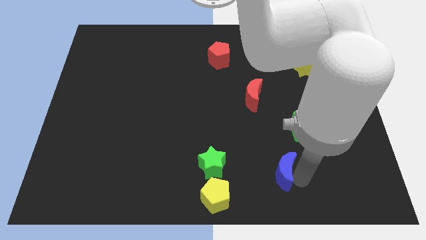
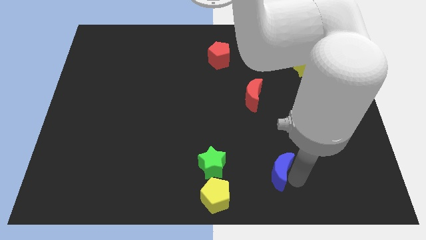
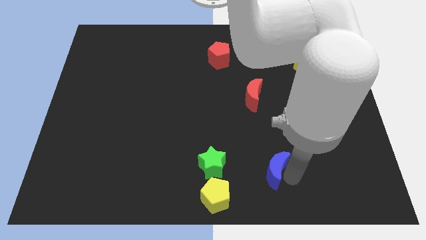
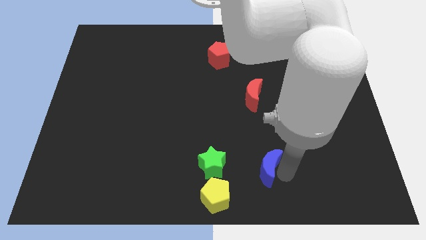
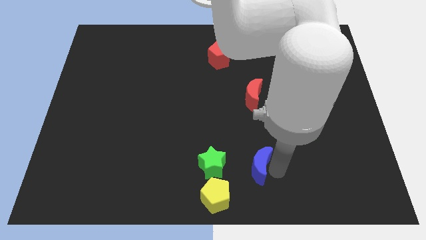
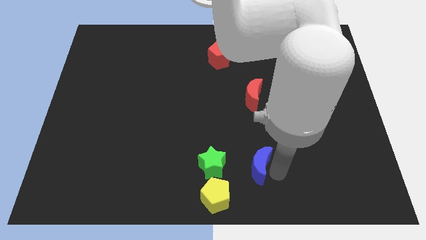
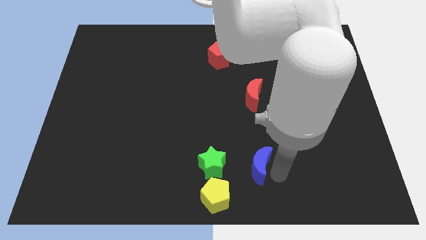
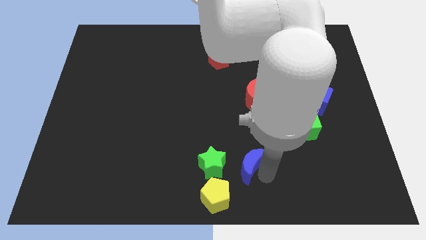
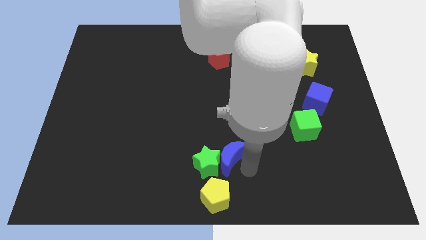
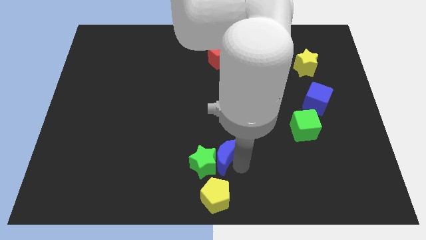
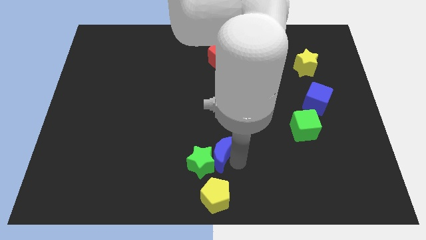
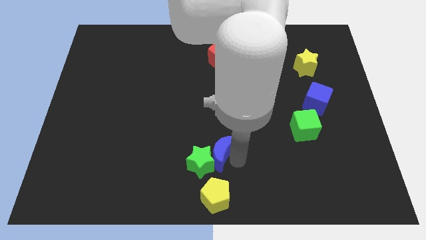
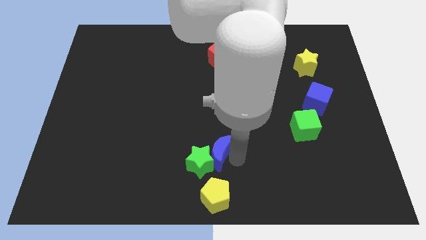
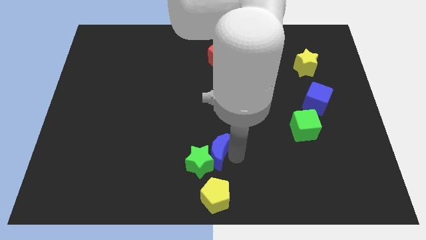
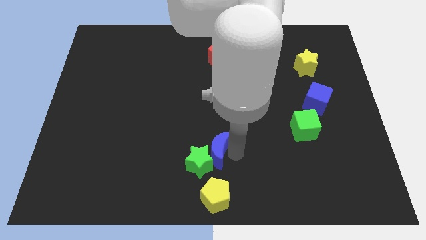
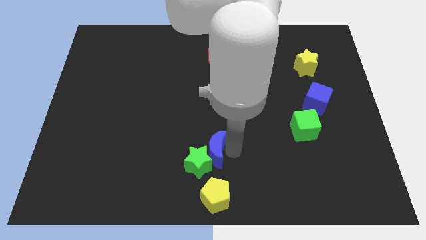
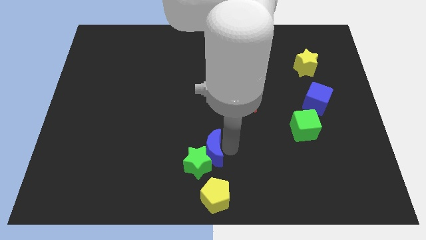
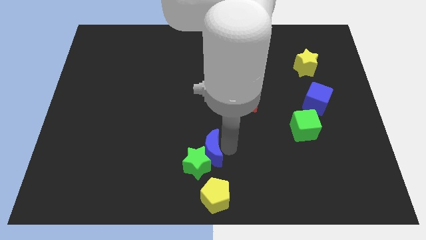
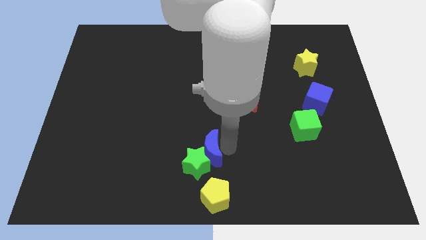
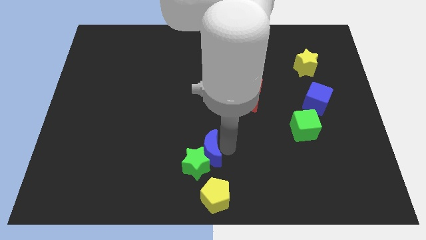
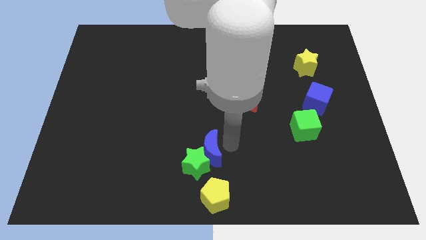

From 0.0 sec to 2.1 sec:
push the blue moon close to the green star

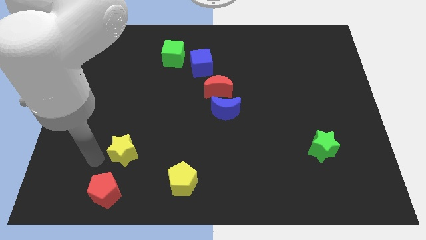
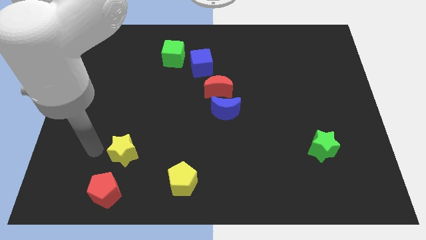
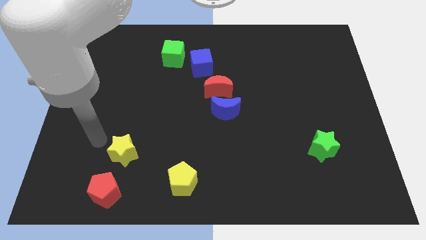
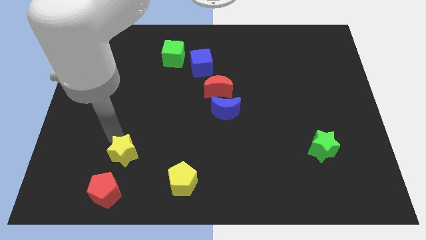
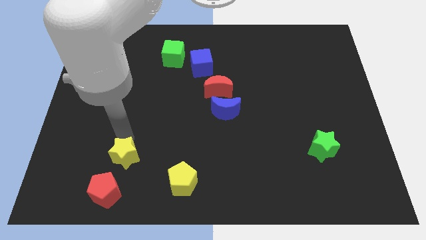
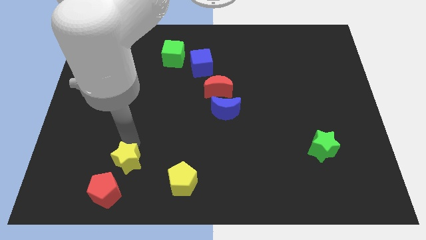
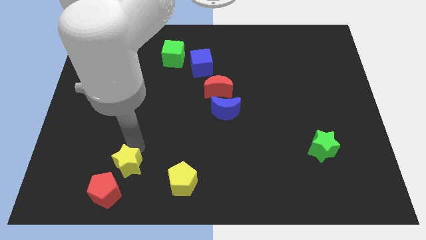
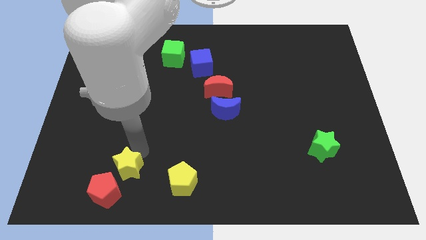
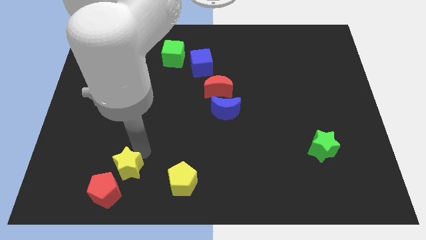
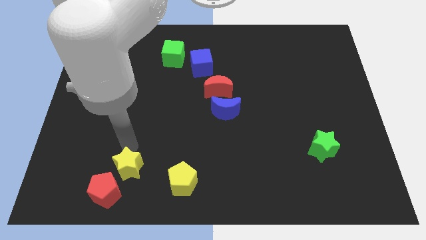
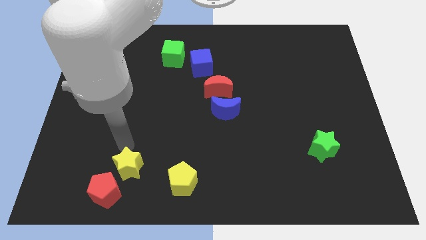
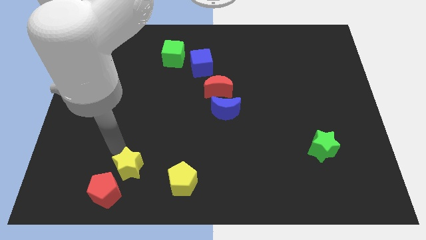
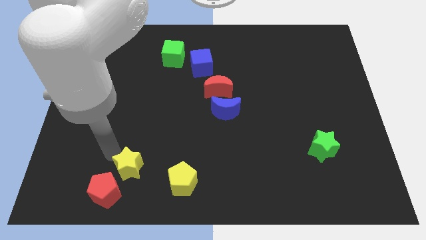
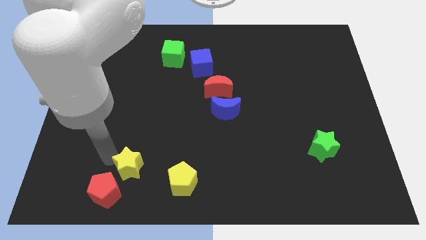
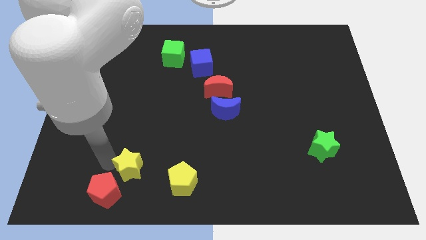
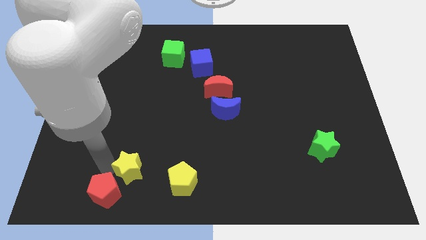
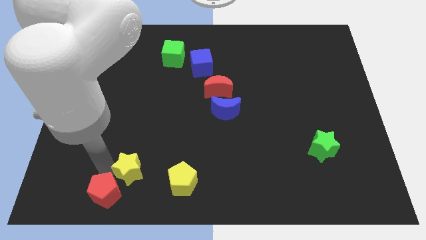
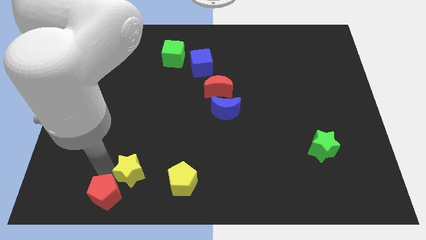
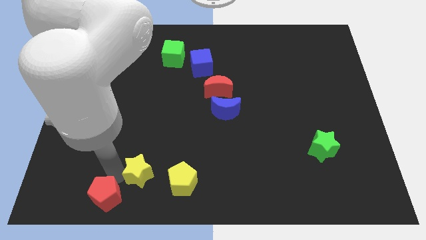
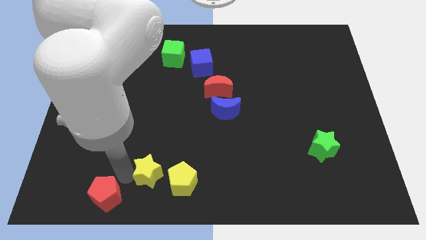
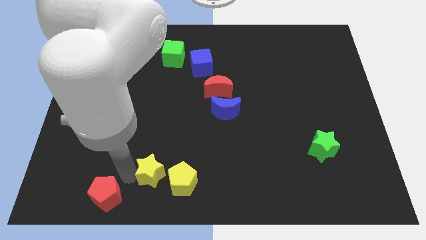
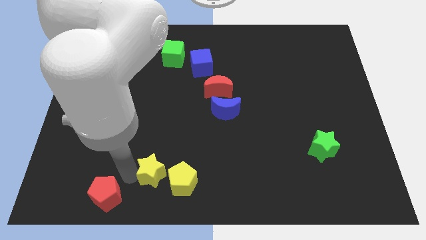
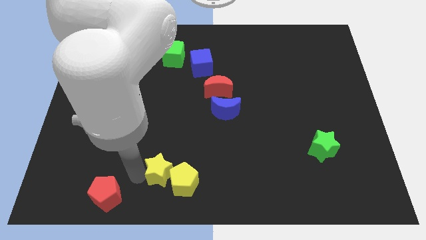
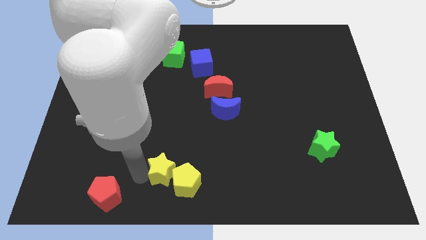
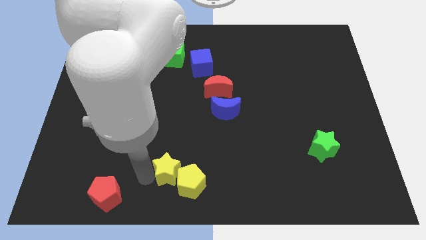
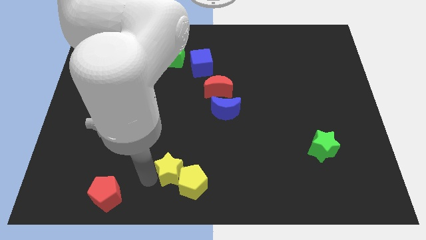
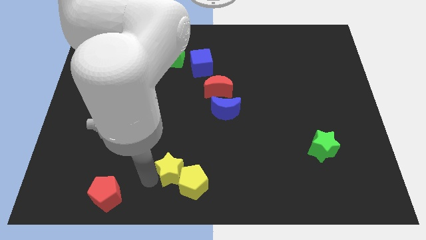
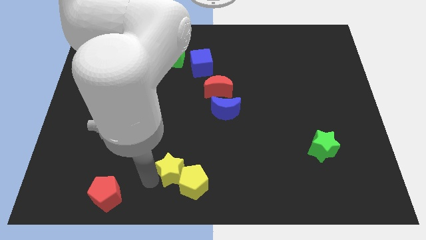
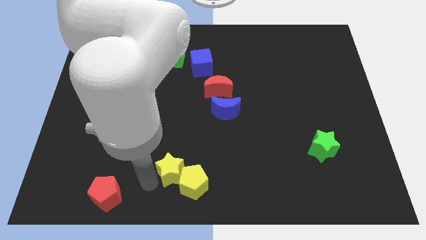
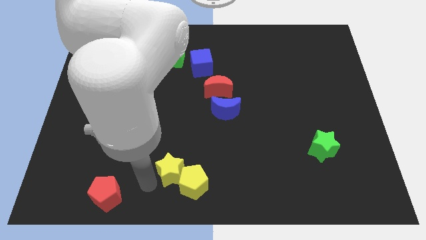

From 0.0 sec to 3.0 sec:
push the yellow star into the yellow pentagon

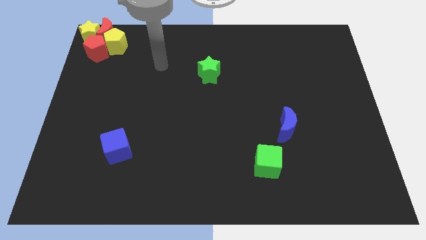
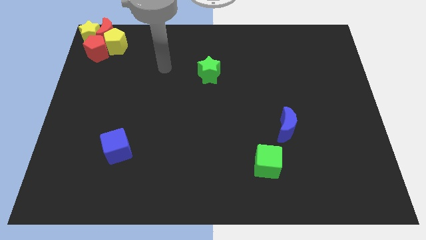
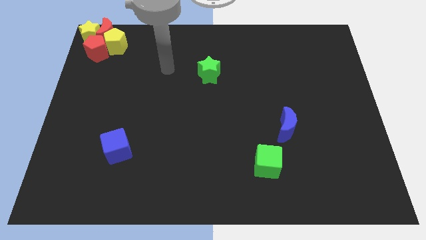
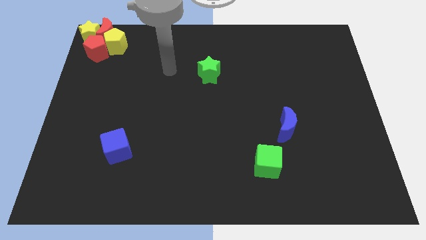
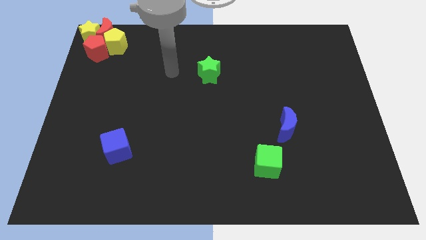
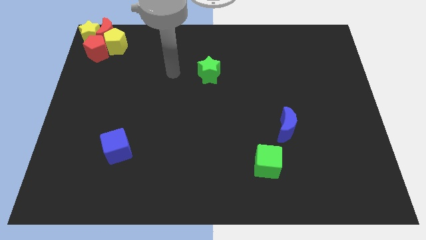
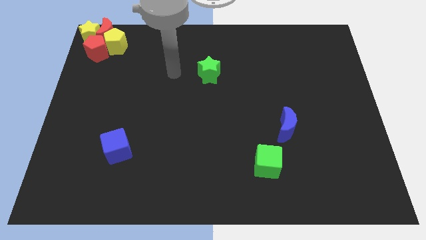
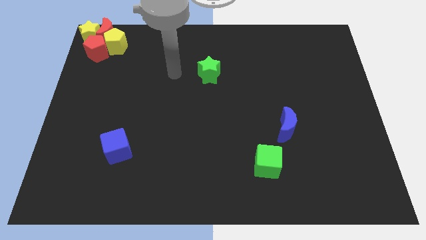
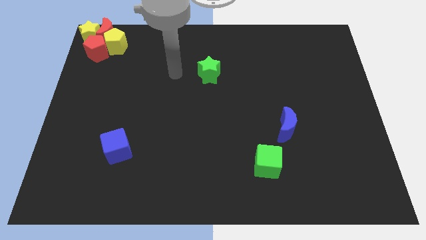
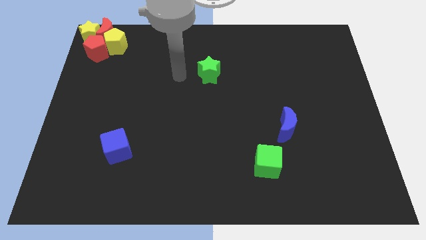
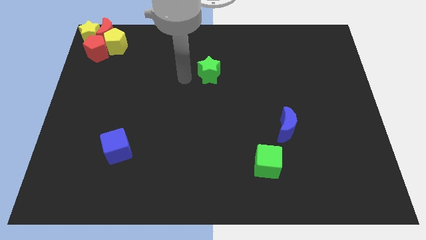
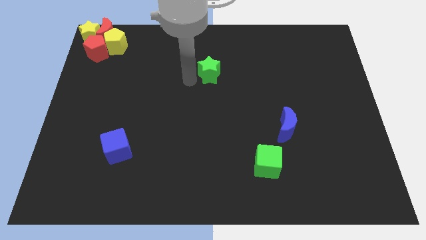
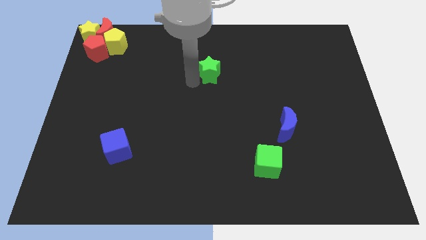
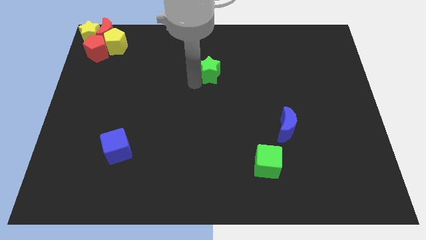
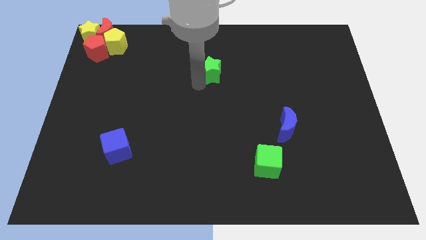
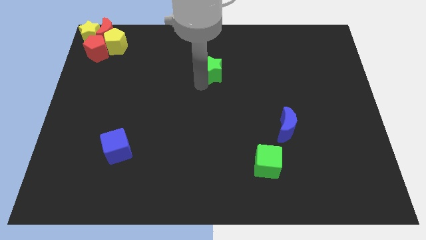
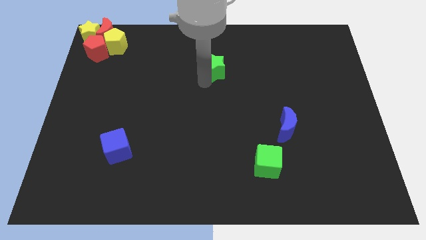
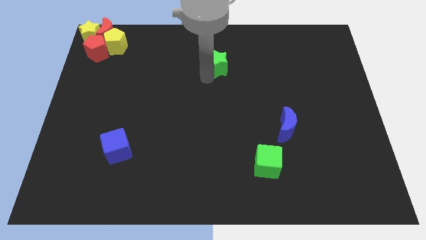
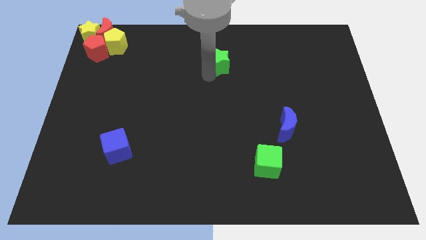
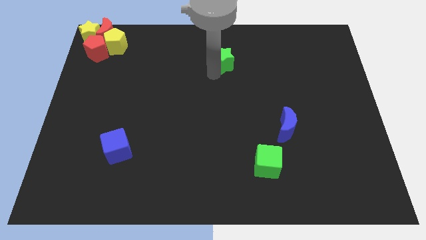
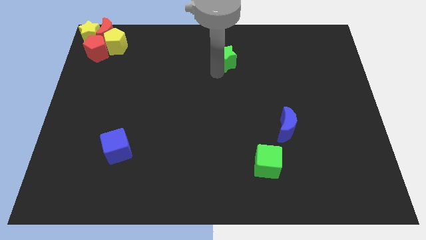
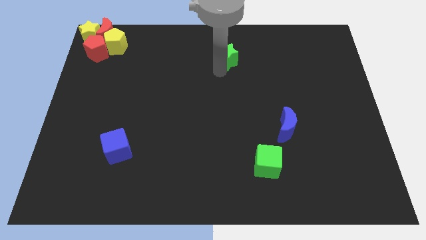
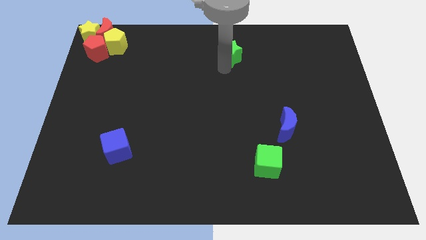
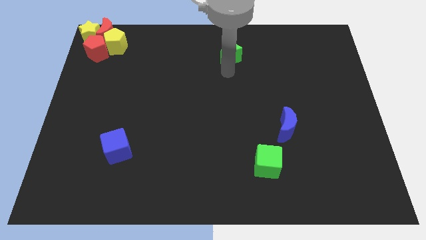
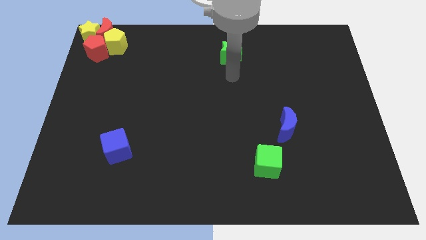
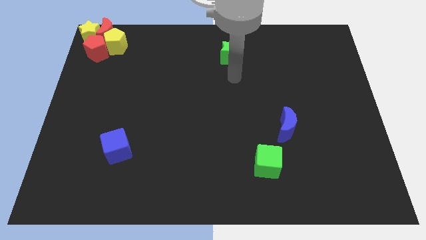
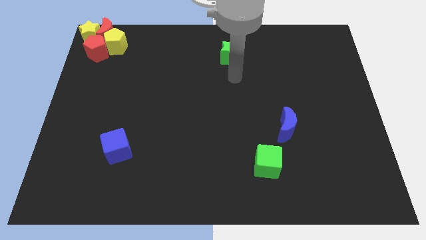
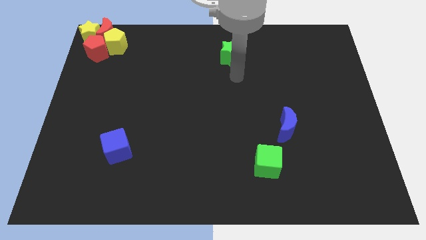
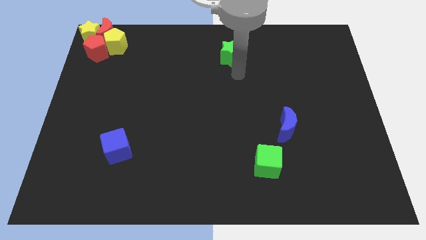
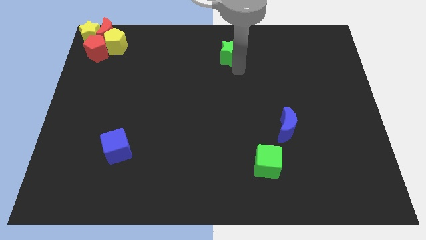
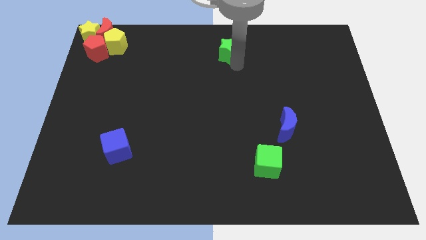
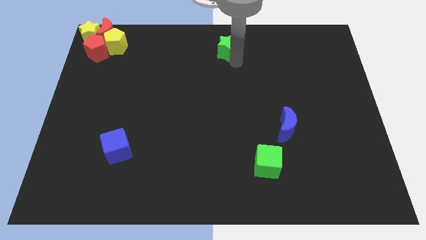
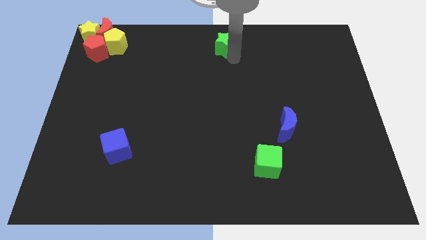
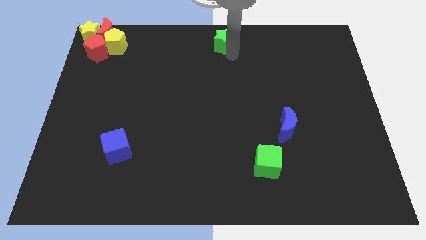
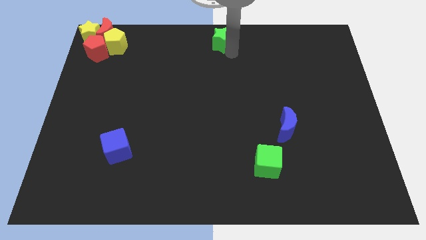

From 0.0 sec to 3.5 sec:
place the green star at the top center of the board

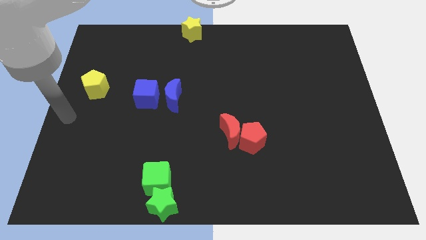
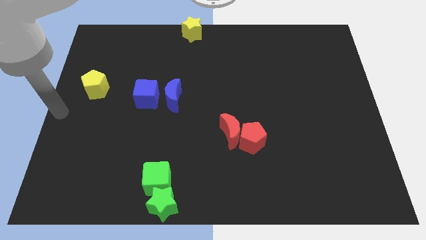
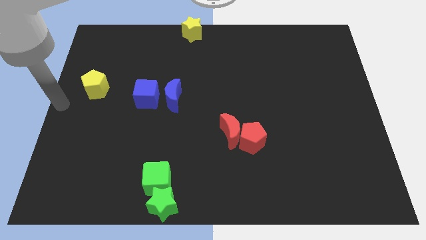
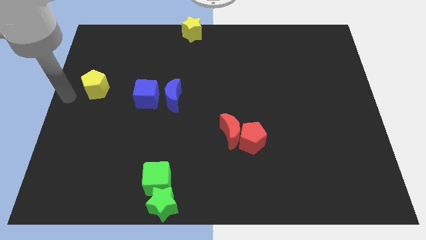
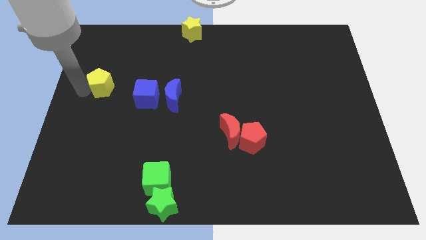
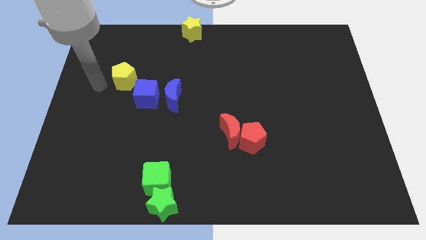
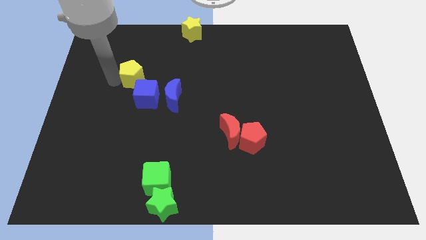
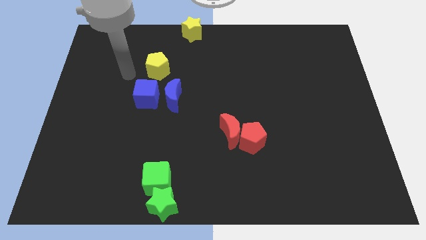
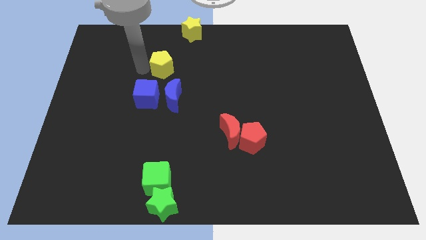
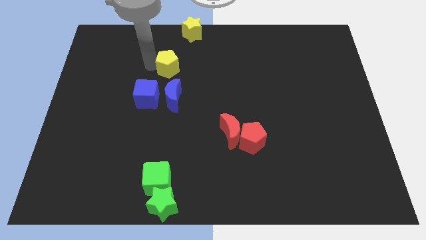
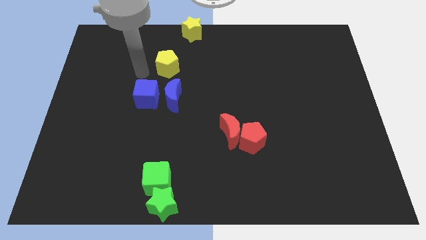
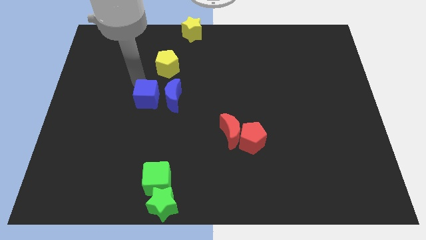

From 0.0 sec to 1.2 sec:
place the yellow pentagon at the top of blue blocks
